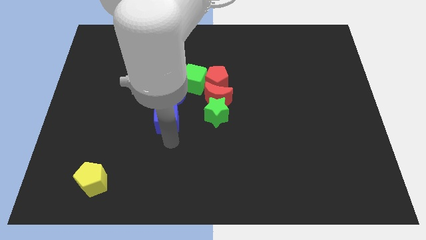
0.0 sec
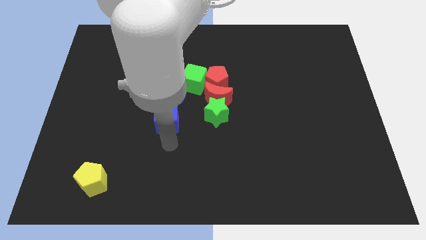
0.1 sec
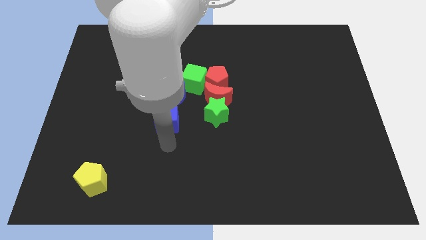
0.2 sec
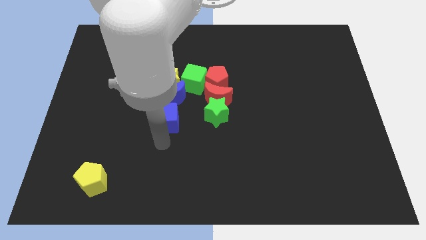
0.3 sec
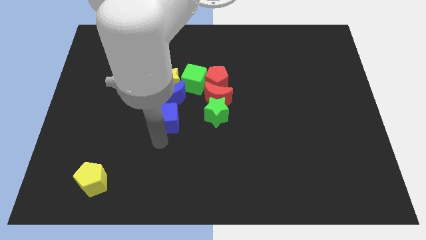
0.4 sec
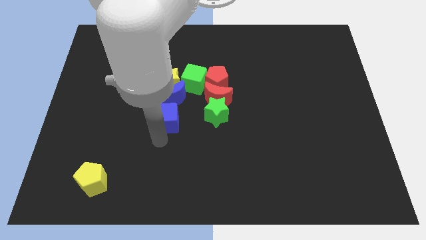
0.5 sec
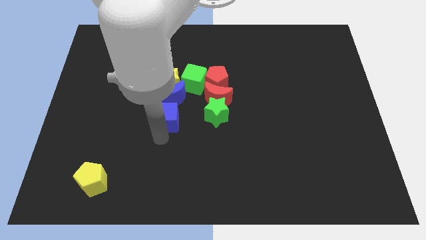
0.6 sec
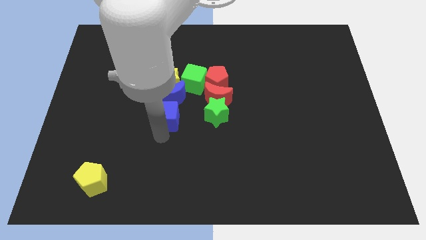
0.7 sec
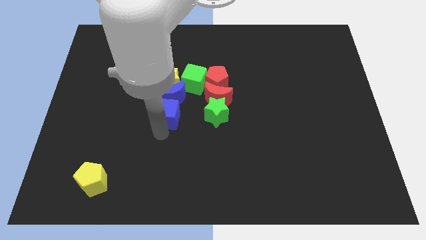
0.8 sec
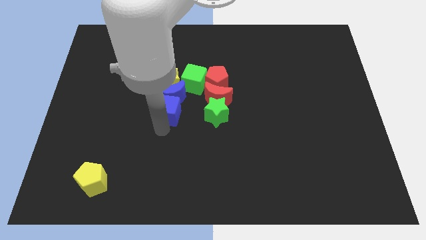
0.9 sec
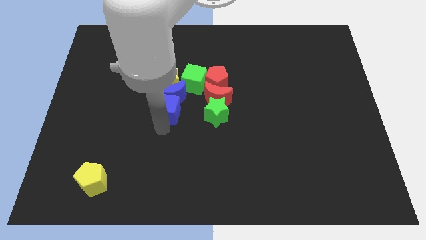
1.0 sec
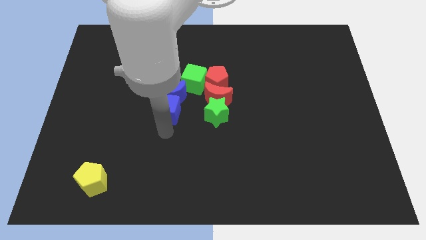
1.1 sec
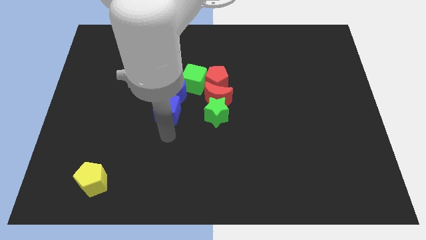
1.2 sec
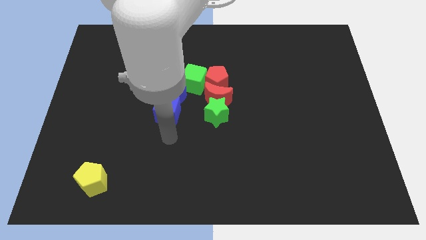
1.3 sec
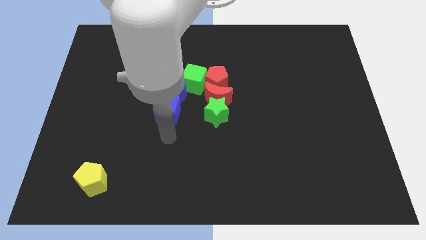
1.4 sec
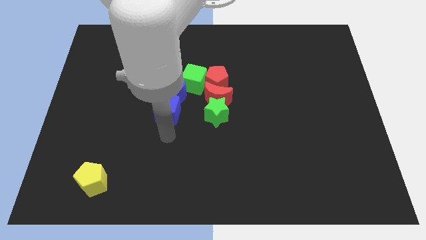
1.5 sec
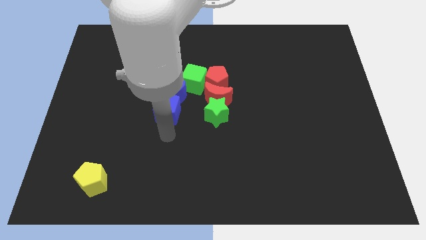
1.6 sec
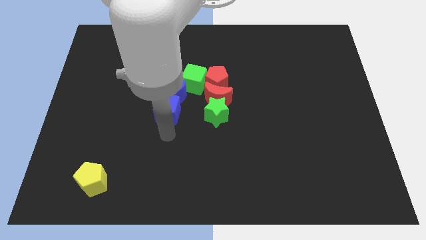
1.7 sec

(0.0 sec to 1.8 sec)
place the blue cube bottom of the blue crescent

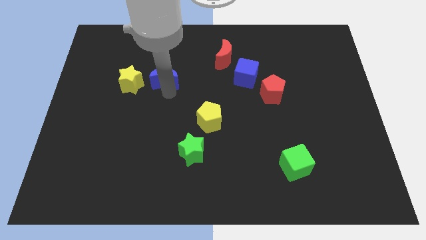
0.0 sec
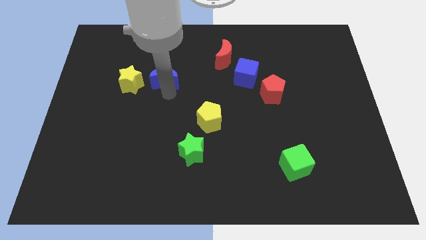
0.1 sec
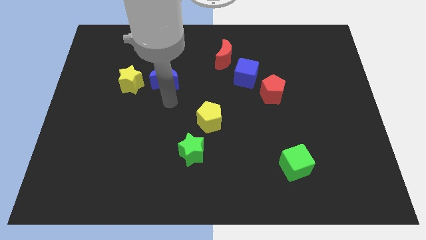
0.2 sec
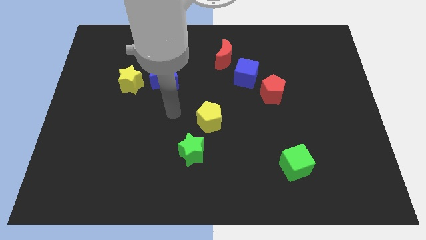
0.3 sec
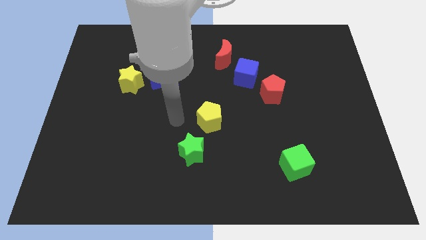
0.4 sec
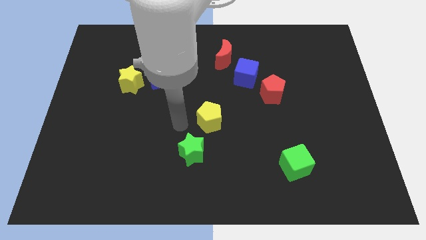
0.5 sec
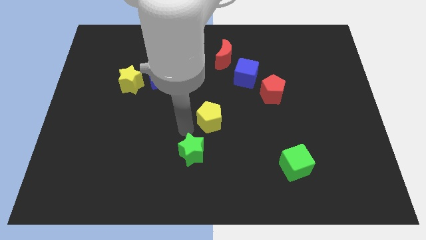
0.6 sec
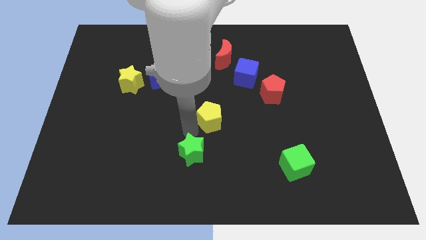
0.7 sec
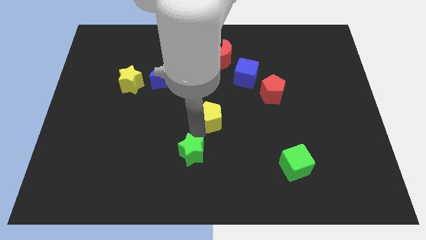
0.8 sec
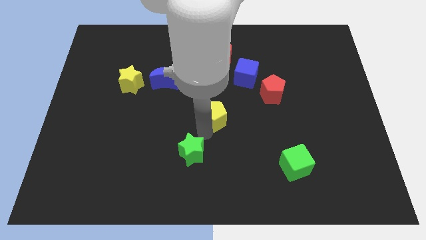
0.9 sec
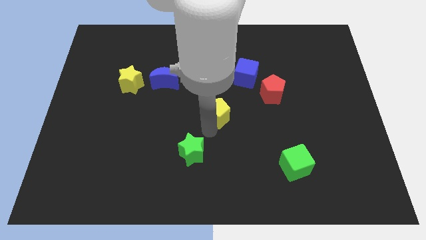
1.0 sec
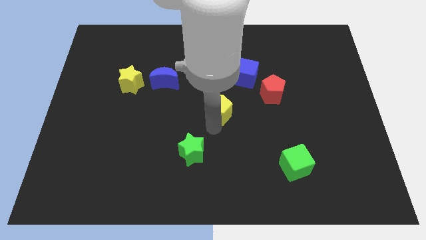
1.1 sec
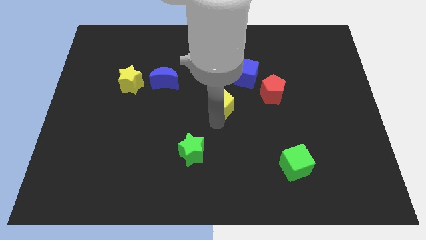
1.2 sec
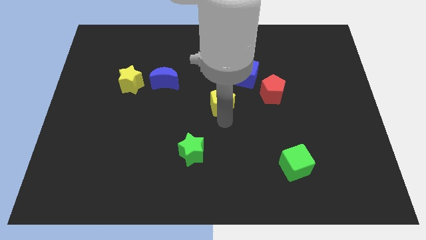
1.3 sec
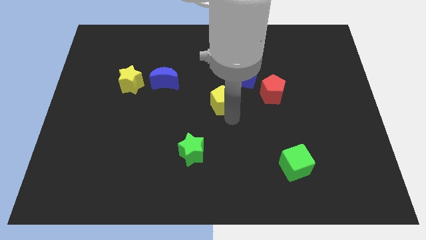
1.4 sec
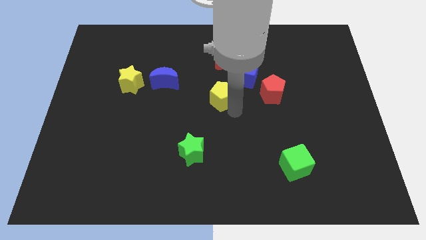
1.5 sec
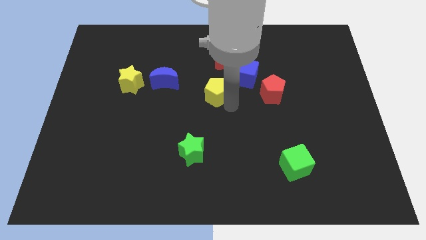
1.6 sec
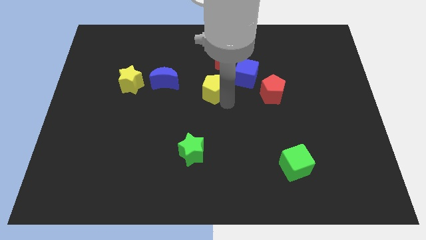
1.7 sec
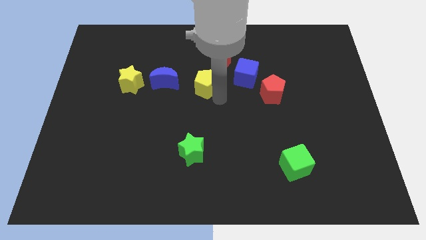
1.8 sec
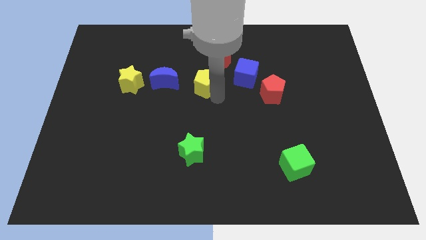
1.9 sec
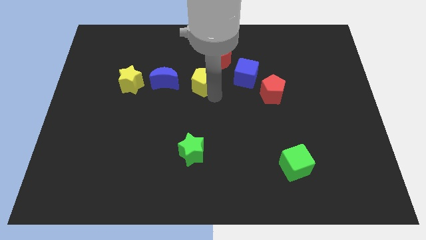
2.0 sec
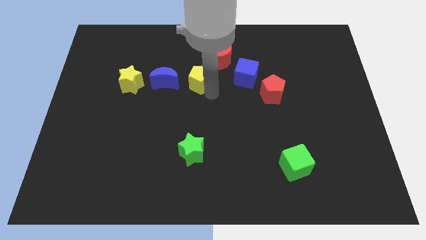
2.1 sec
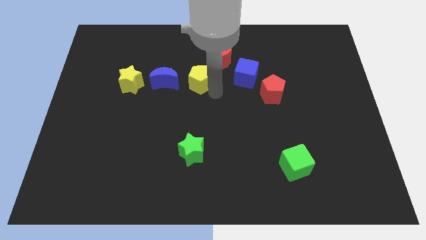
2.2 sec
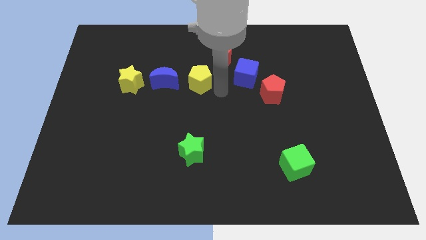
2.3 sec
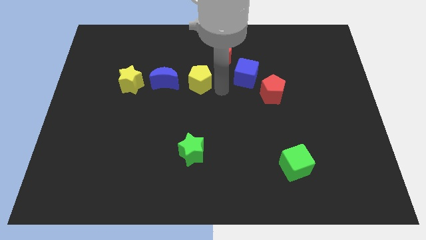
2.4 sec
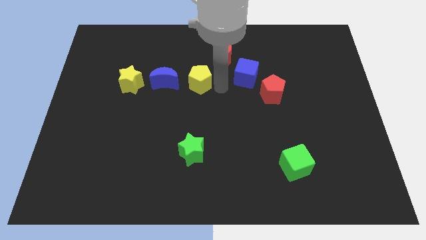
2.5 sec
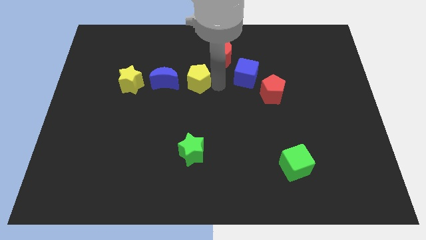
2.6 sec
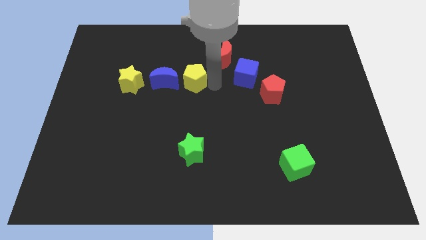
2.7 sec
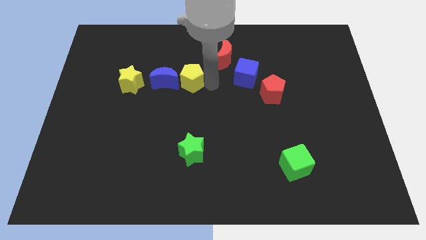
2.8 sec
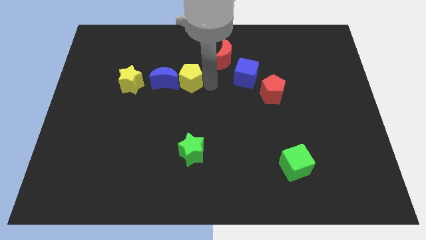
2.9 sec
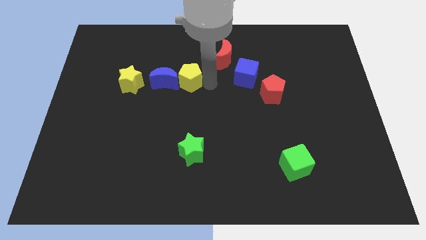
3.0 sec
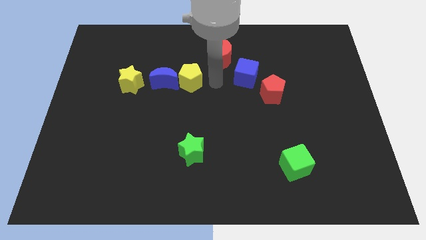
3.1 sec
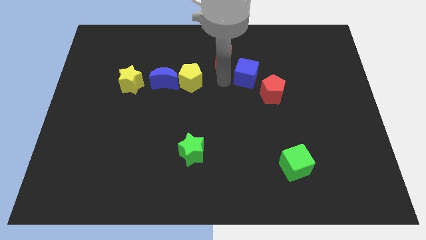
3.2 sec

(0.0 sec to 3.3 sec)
move the yellow pentagon right to the blue crescent

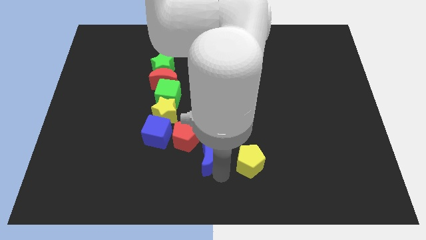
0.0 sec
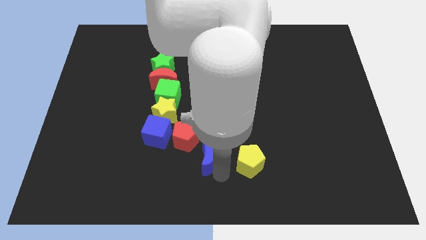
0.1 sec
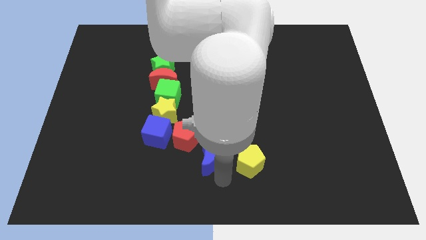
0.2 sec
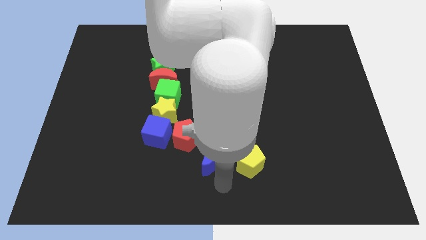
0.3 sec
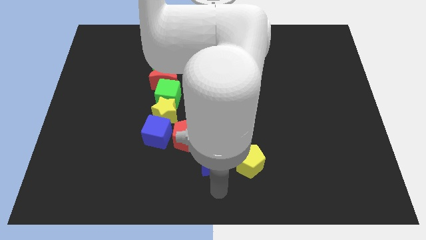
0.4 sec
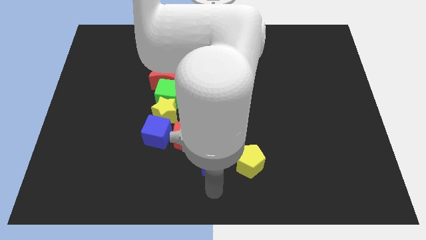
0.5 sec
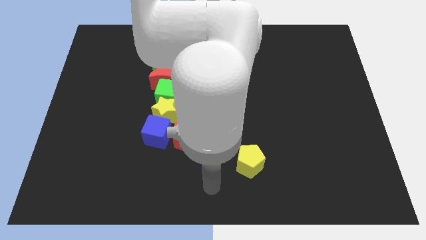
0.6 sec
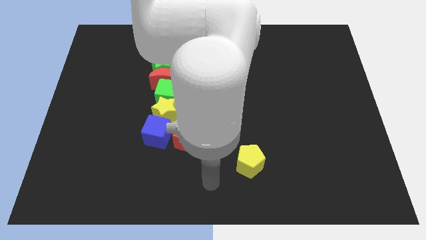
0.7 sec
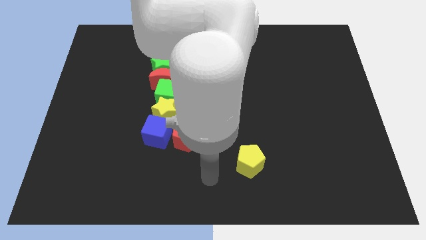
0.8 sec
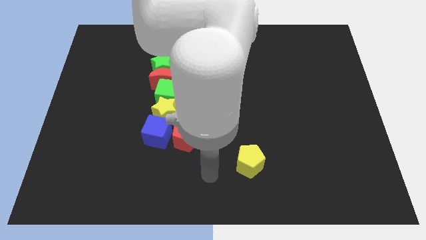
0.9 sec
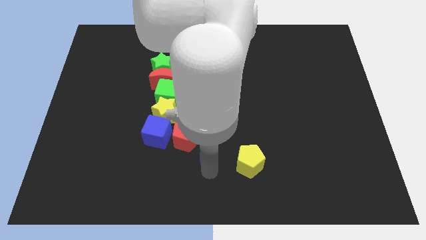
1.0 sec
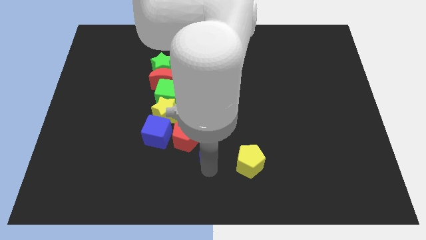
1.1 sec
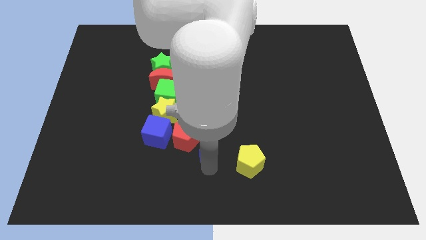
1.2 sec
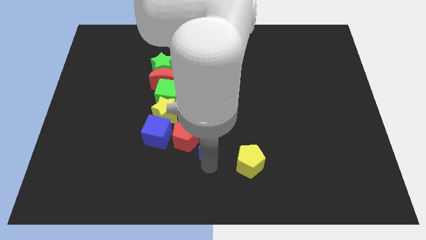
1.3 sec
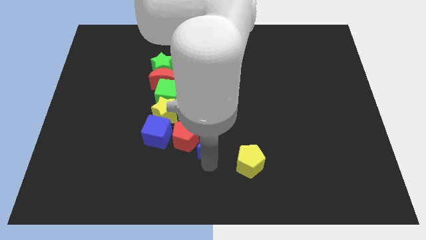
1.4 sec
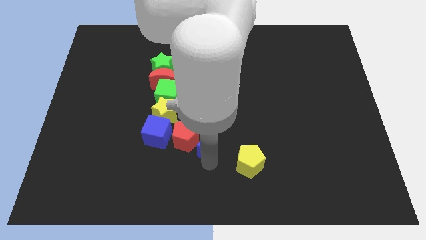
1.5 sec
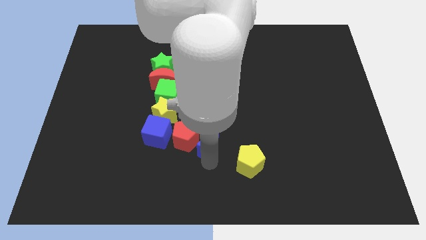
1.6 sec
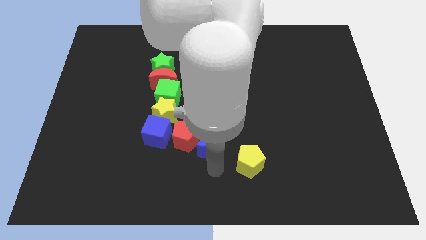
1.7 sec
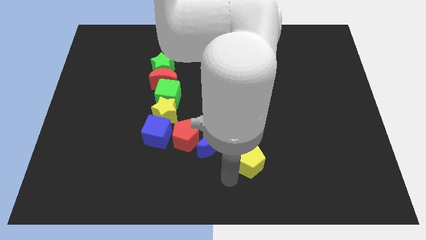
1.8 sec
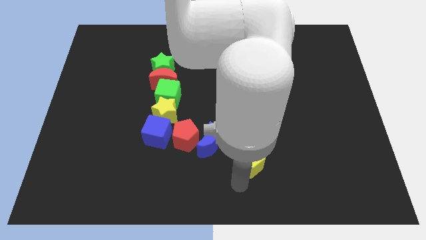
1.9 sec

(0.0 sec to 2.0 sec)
move blue moon beside red pentagon

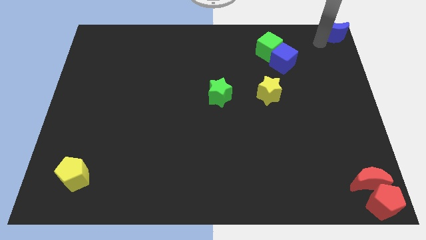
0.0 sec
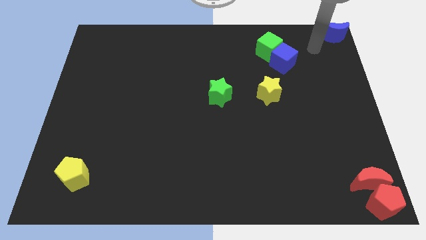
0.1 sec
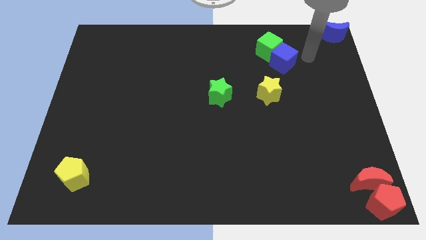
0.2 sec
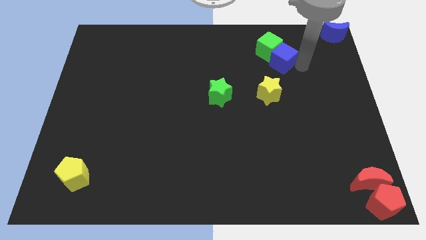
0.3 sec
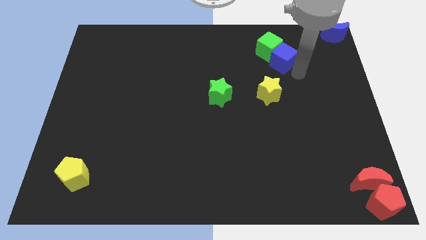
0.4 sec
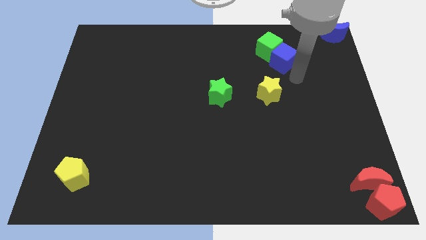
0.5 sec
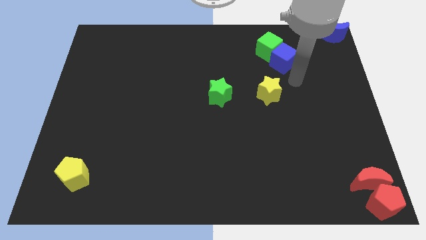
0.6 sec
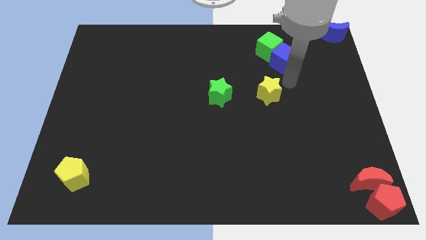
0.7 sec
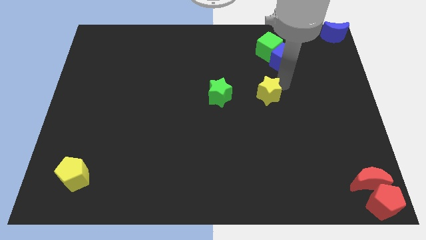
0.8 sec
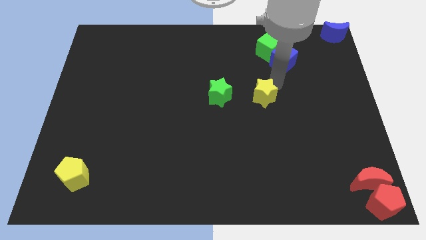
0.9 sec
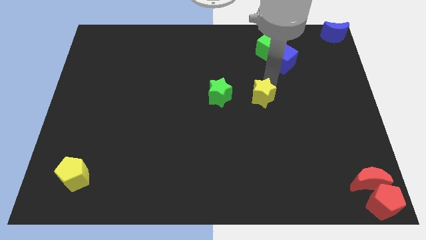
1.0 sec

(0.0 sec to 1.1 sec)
push your arm to the top of the yellow star

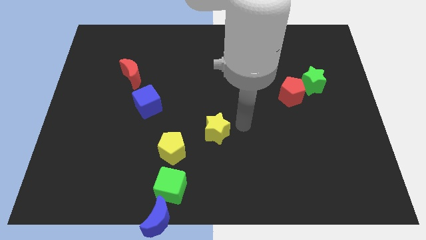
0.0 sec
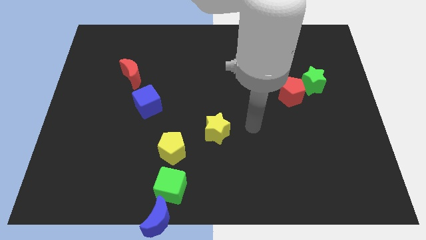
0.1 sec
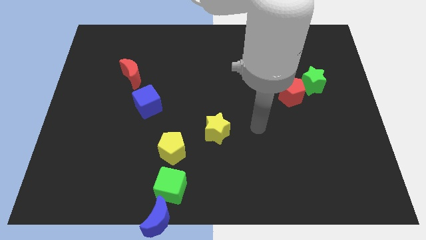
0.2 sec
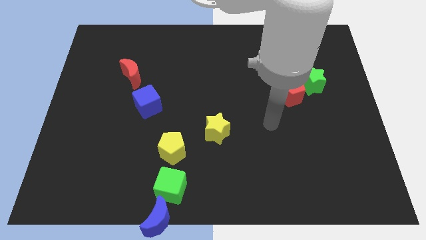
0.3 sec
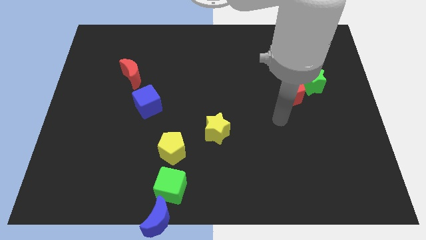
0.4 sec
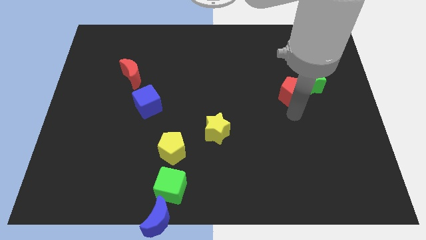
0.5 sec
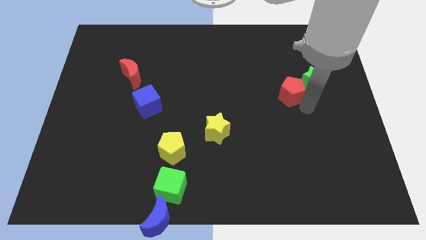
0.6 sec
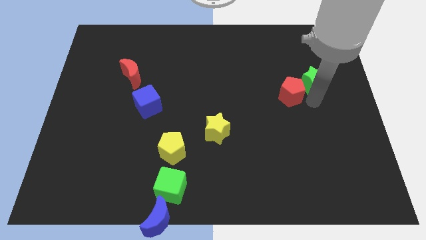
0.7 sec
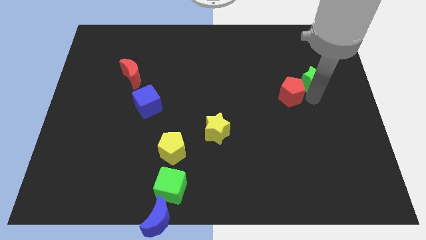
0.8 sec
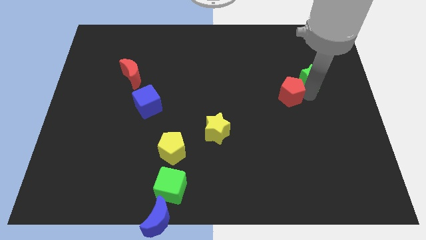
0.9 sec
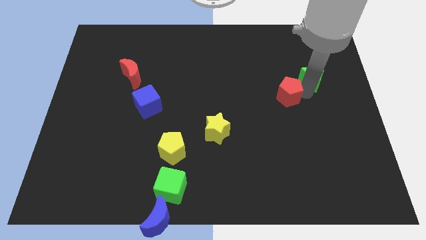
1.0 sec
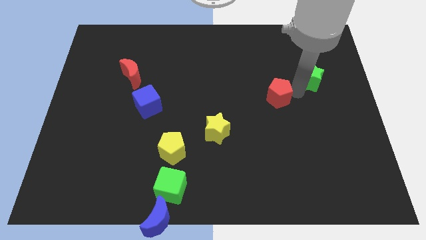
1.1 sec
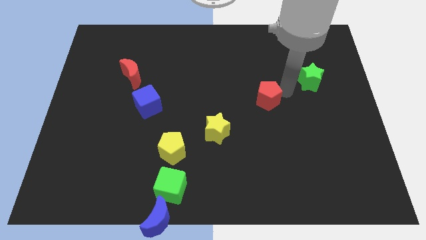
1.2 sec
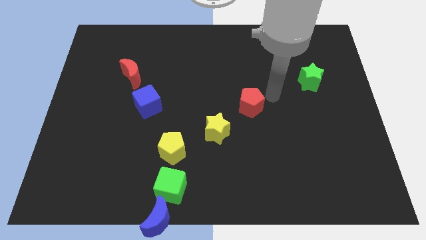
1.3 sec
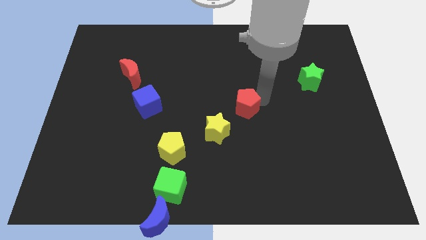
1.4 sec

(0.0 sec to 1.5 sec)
separate red penatgon and green star
